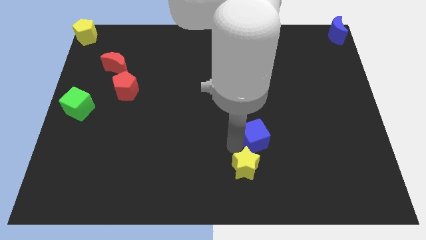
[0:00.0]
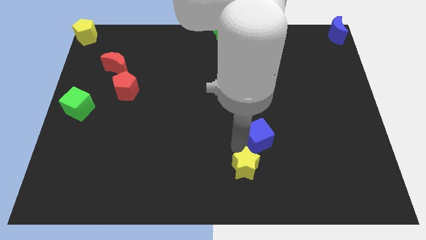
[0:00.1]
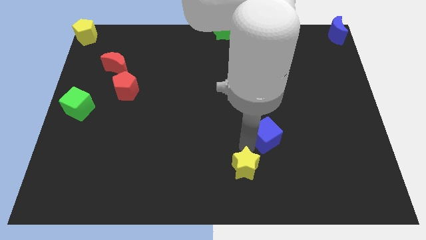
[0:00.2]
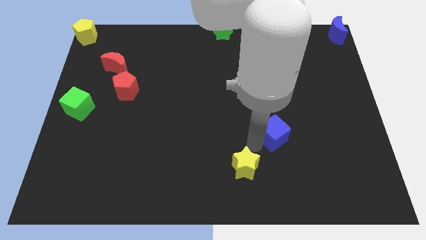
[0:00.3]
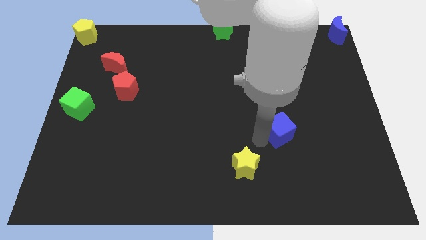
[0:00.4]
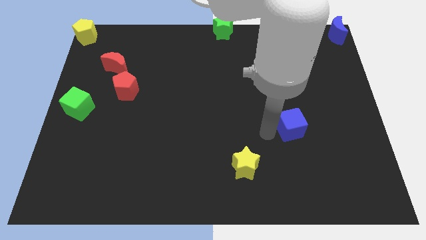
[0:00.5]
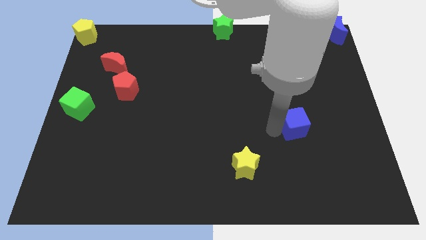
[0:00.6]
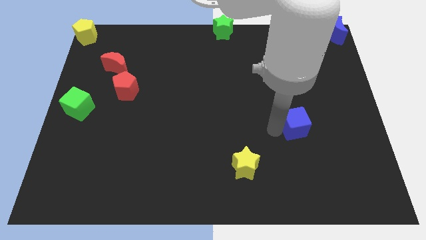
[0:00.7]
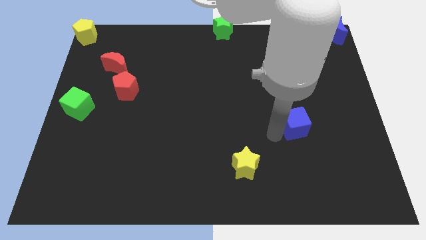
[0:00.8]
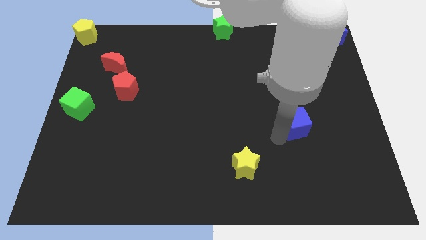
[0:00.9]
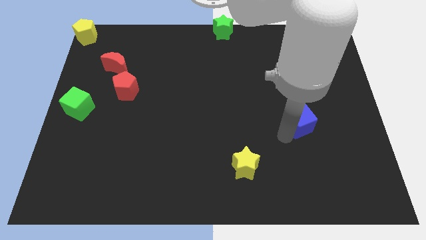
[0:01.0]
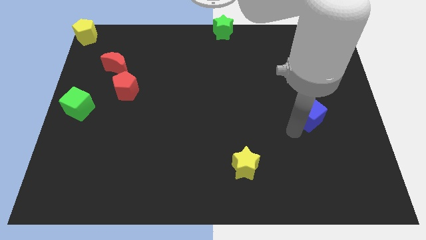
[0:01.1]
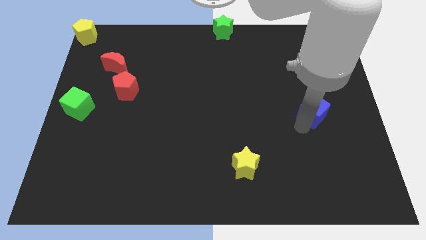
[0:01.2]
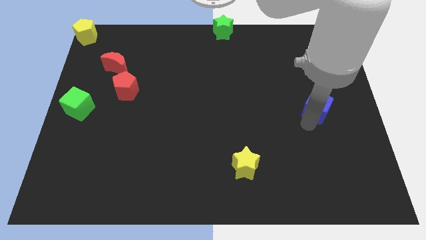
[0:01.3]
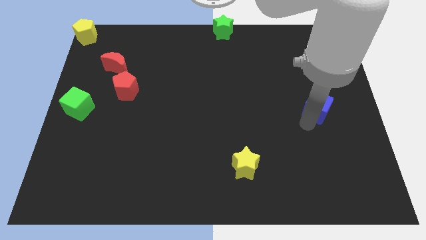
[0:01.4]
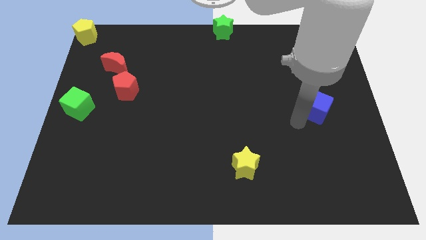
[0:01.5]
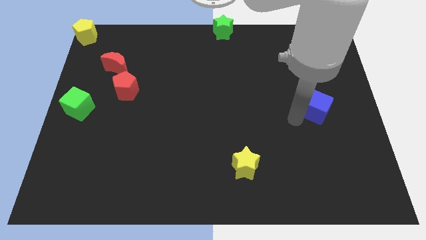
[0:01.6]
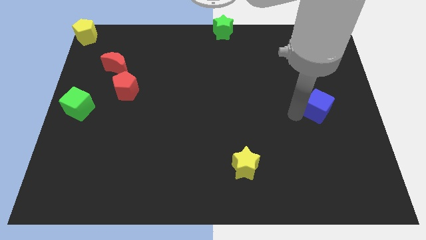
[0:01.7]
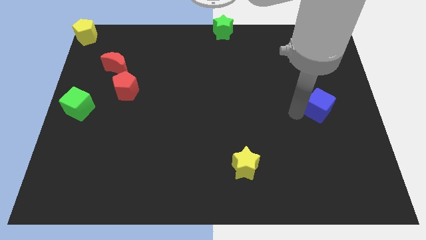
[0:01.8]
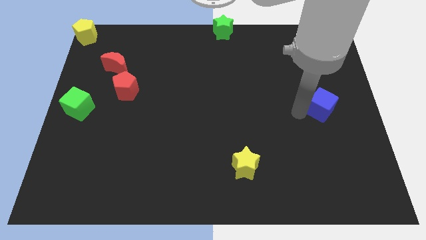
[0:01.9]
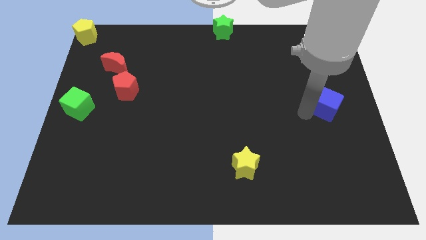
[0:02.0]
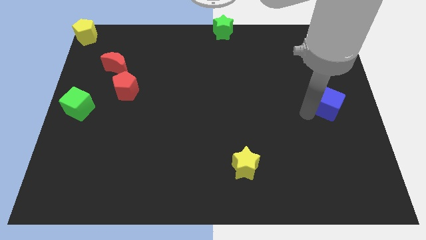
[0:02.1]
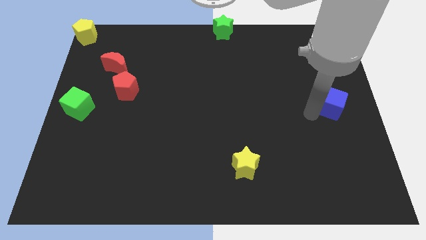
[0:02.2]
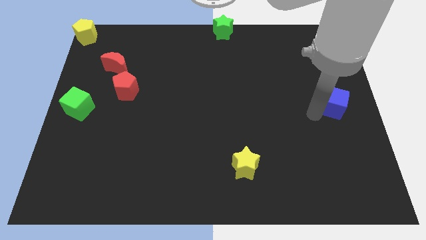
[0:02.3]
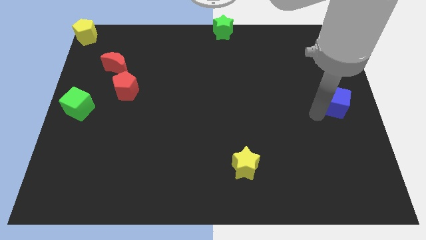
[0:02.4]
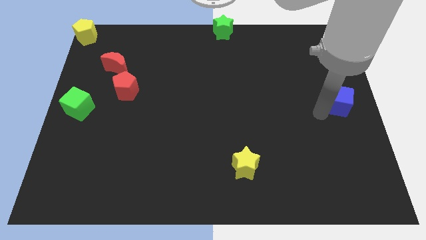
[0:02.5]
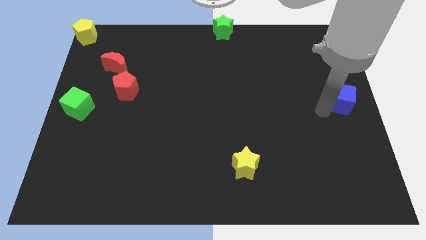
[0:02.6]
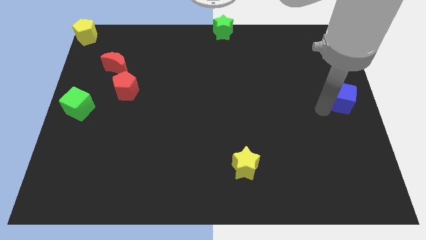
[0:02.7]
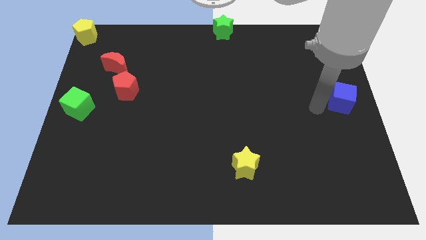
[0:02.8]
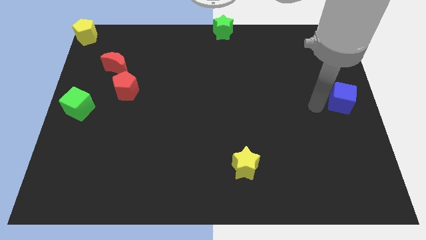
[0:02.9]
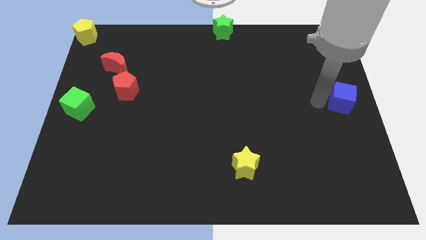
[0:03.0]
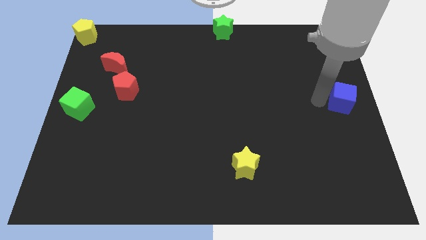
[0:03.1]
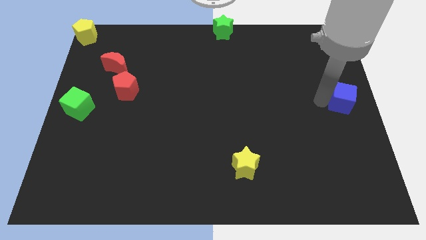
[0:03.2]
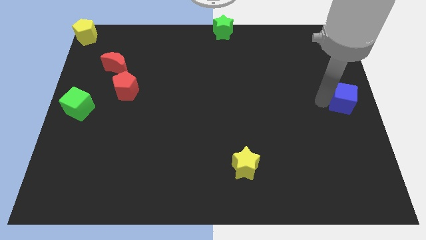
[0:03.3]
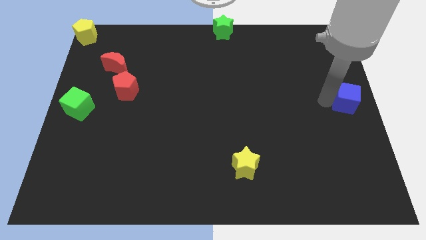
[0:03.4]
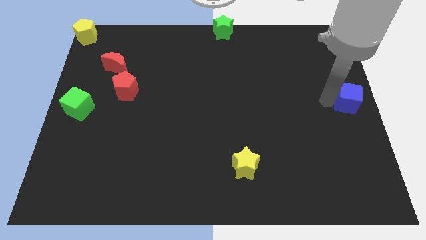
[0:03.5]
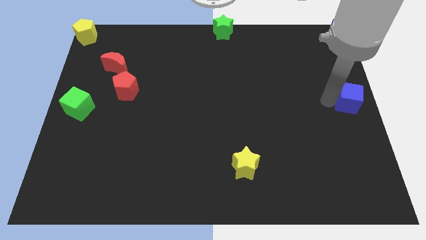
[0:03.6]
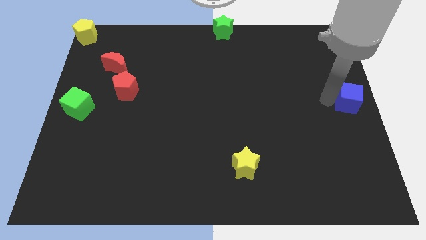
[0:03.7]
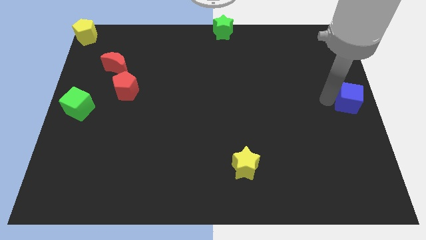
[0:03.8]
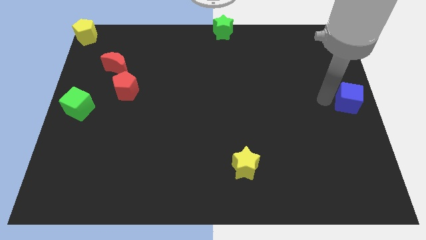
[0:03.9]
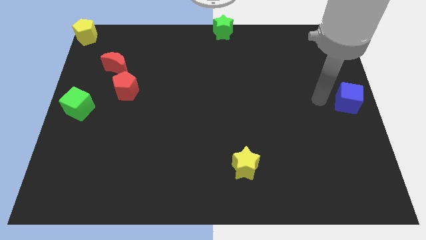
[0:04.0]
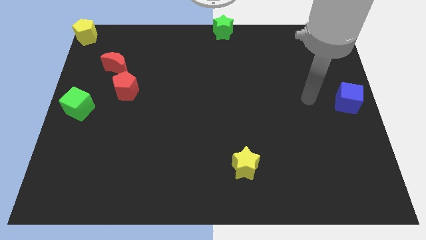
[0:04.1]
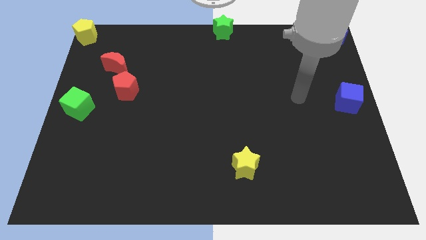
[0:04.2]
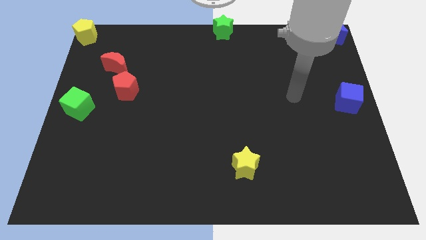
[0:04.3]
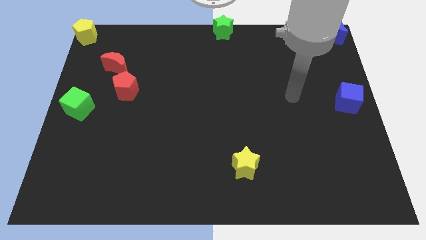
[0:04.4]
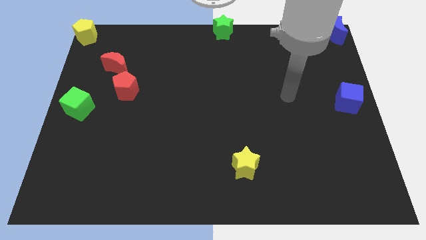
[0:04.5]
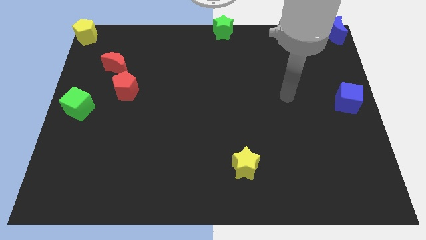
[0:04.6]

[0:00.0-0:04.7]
place the blue cube to the center right of the board

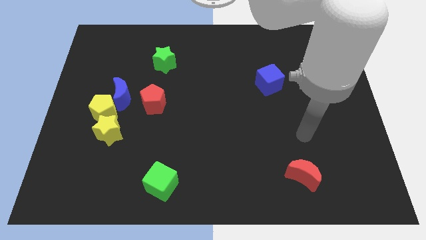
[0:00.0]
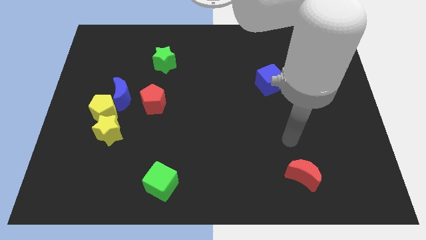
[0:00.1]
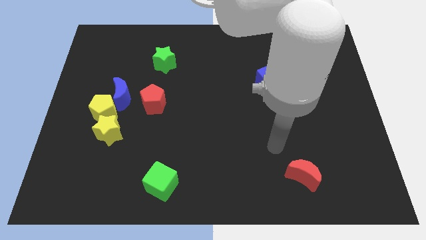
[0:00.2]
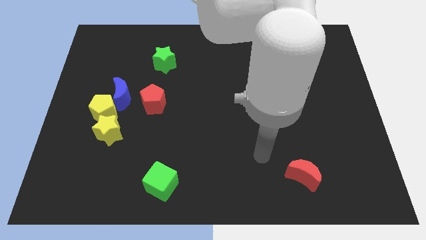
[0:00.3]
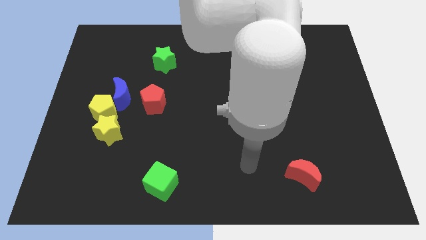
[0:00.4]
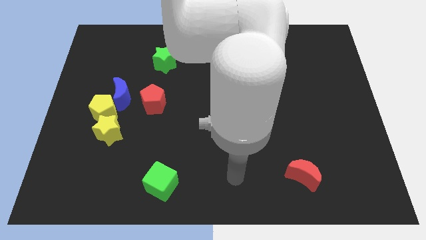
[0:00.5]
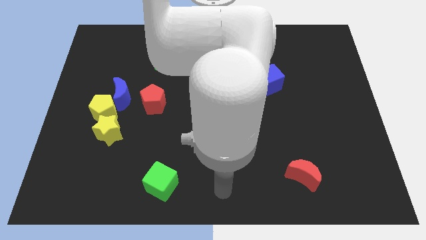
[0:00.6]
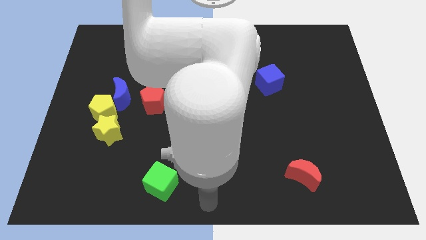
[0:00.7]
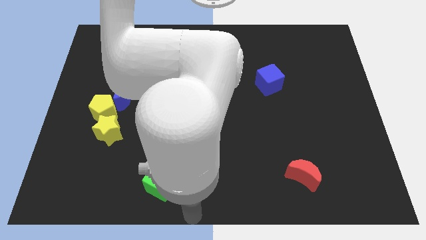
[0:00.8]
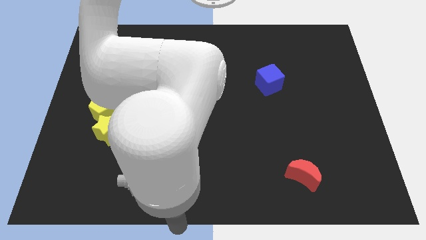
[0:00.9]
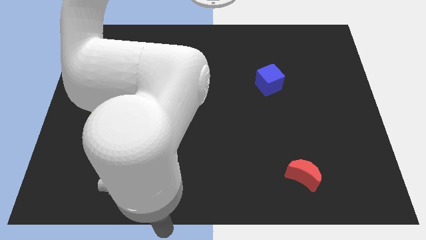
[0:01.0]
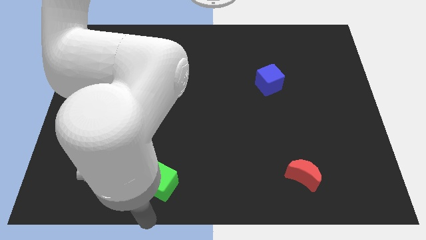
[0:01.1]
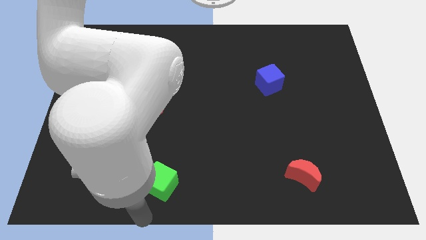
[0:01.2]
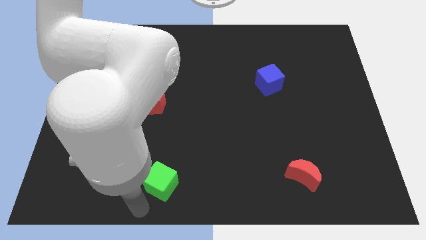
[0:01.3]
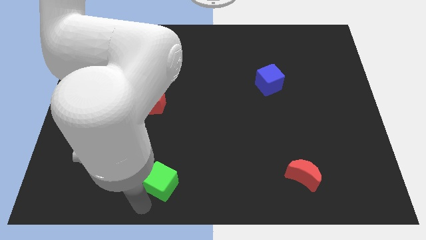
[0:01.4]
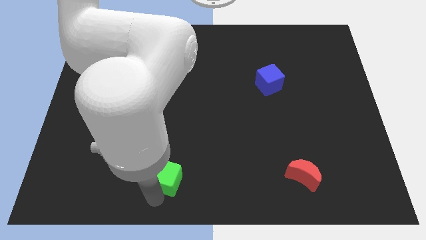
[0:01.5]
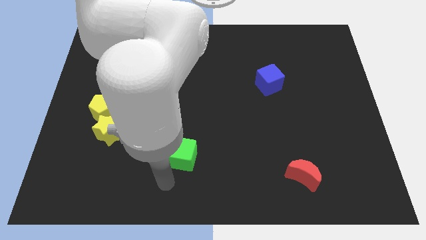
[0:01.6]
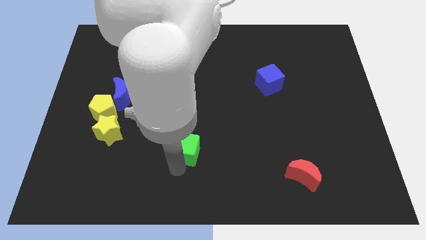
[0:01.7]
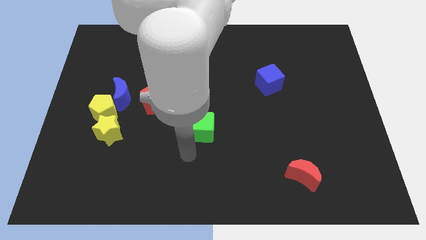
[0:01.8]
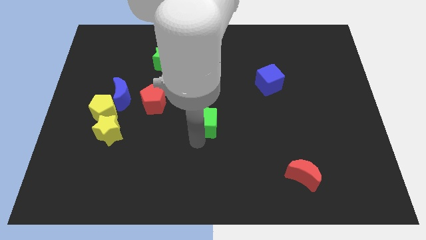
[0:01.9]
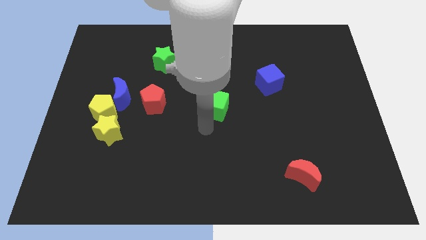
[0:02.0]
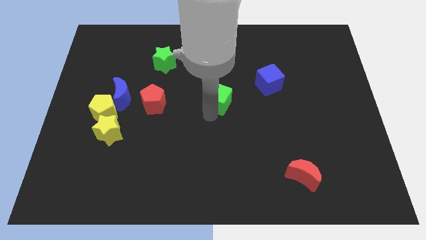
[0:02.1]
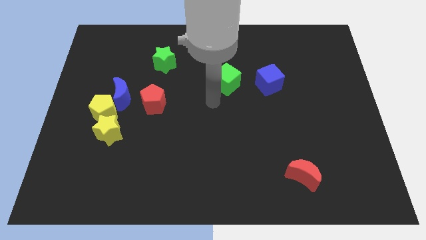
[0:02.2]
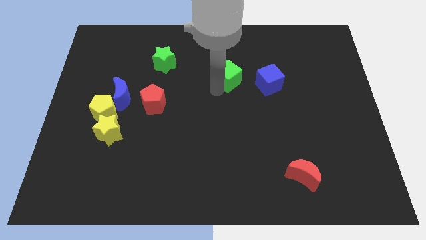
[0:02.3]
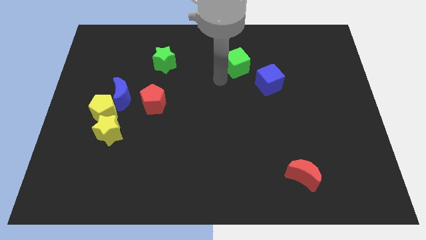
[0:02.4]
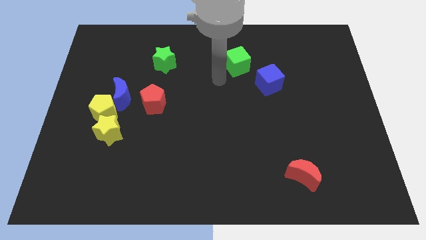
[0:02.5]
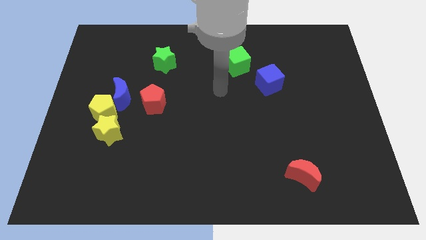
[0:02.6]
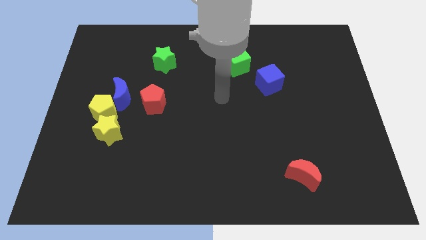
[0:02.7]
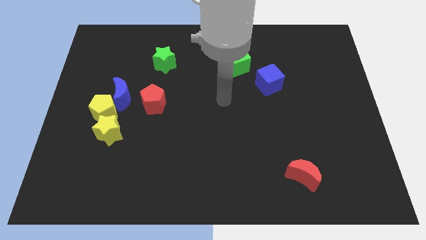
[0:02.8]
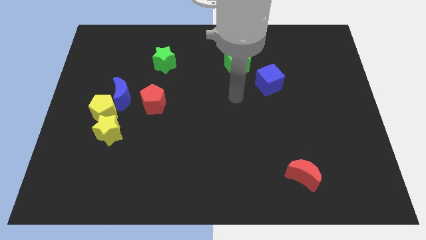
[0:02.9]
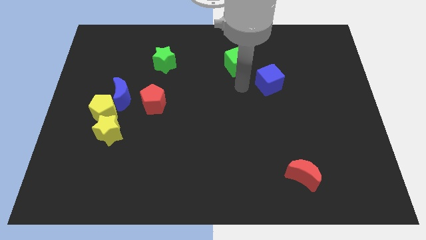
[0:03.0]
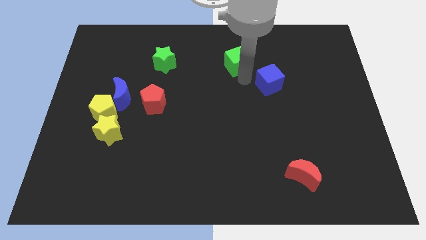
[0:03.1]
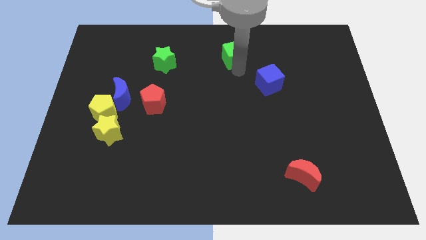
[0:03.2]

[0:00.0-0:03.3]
place the green cube digonally to the blue cube

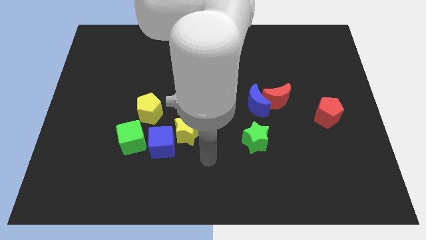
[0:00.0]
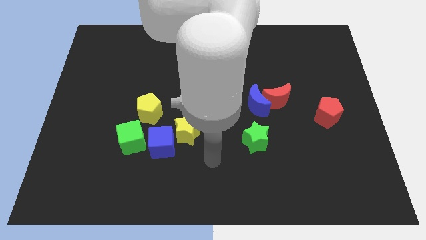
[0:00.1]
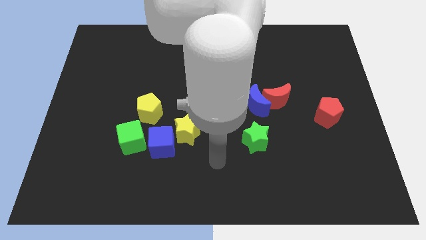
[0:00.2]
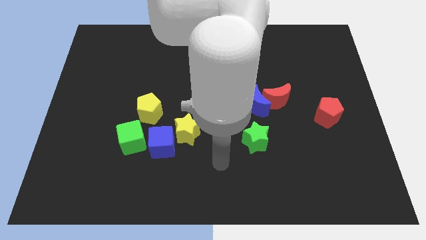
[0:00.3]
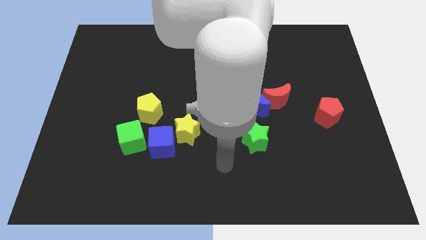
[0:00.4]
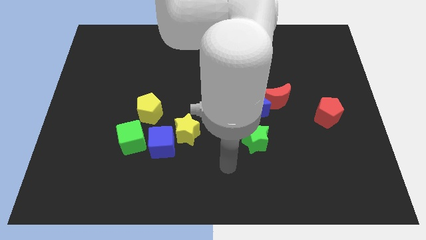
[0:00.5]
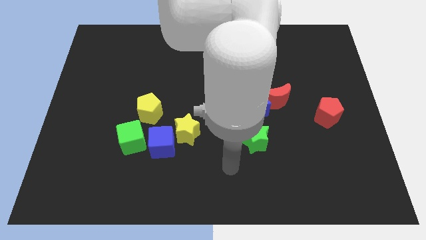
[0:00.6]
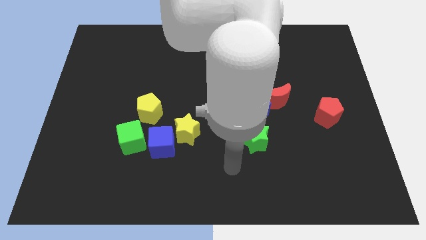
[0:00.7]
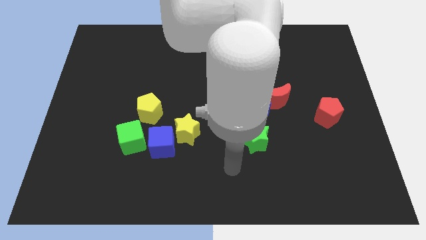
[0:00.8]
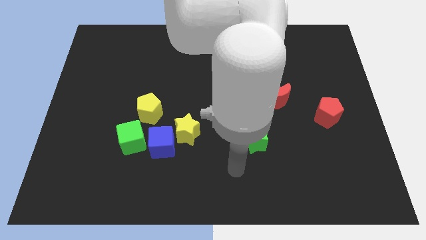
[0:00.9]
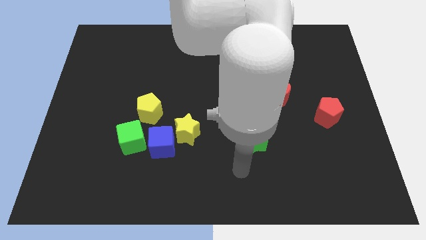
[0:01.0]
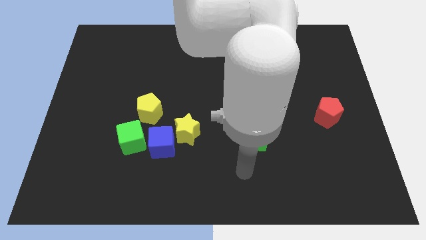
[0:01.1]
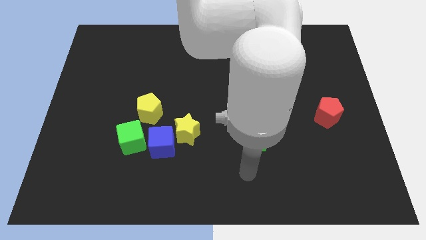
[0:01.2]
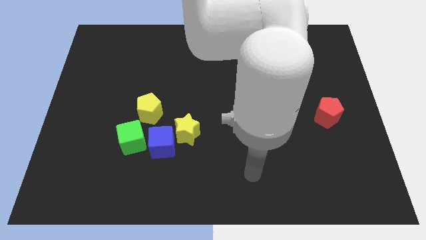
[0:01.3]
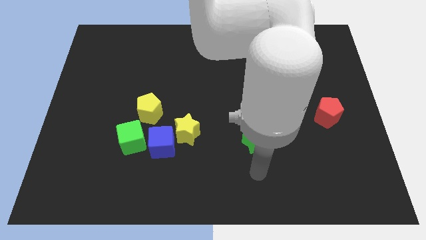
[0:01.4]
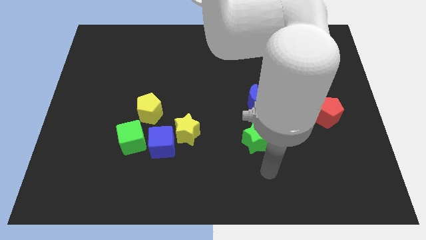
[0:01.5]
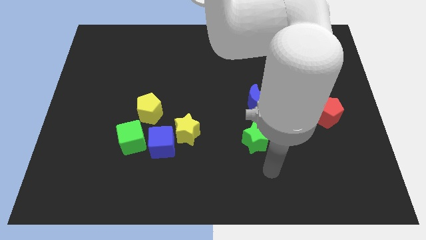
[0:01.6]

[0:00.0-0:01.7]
move your arm towards the right side of the board
